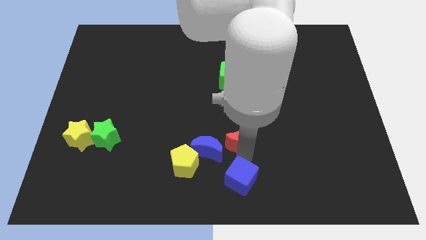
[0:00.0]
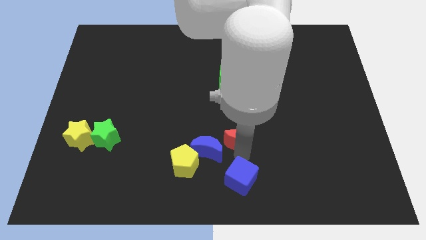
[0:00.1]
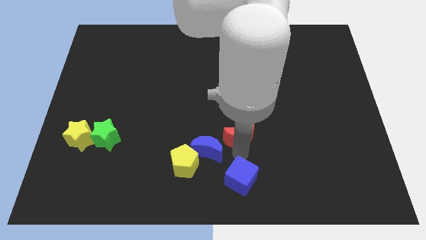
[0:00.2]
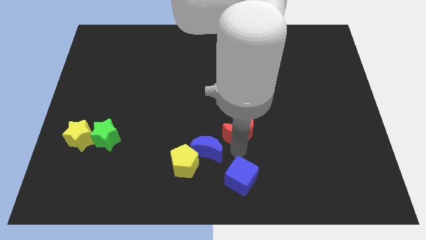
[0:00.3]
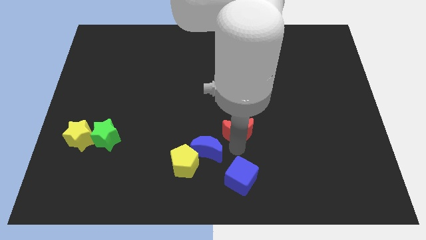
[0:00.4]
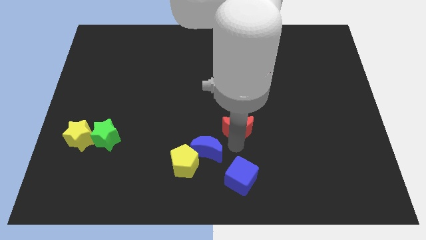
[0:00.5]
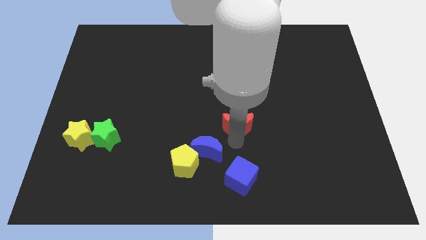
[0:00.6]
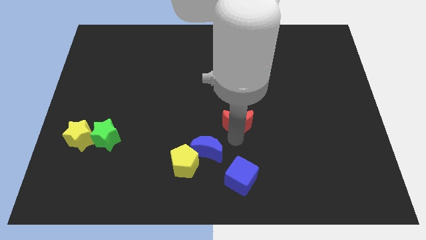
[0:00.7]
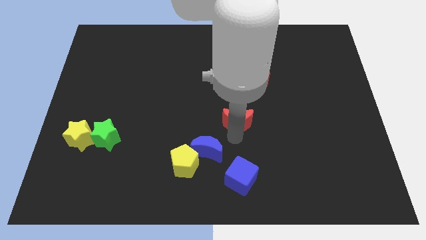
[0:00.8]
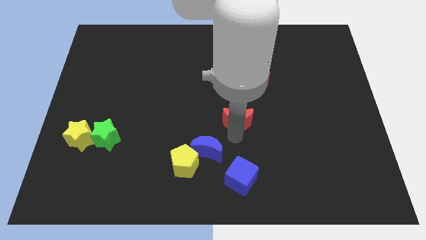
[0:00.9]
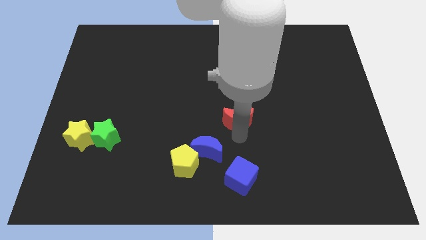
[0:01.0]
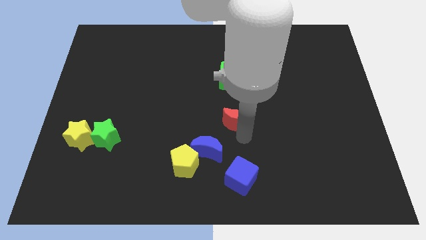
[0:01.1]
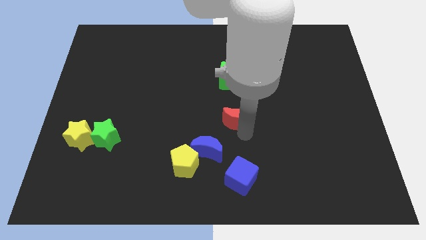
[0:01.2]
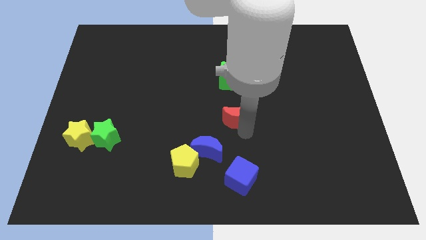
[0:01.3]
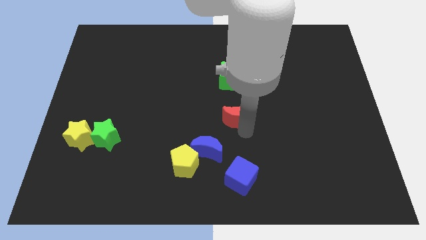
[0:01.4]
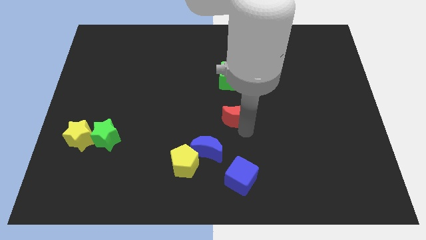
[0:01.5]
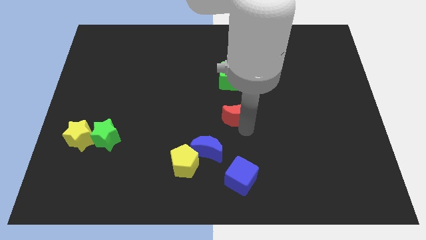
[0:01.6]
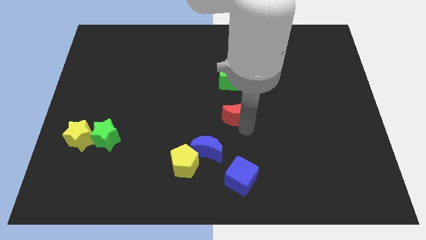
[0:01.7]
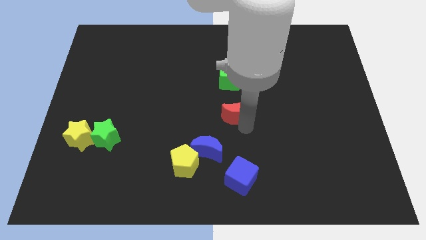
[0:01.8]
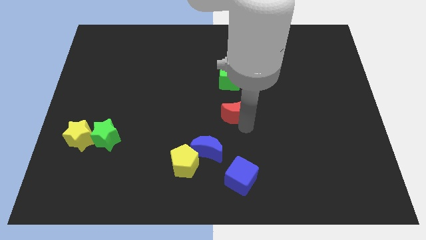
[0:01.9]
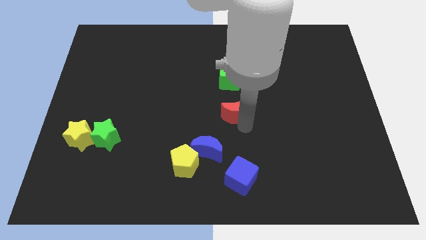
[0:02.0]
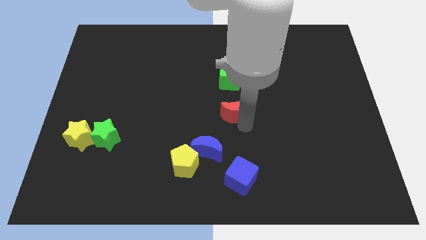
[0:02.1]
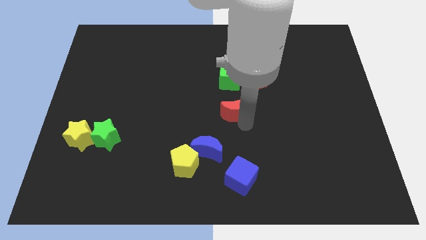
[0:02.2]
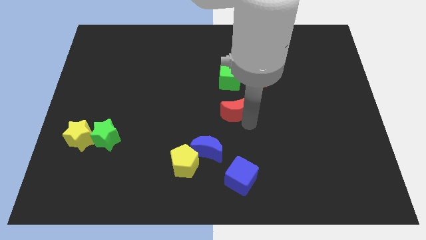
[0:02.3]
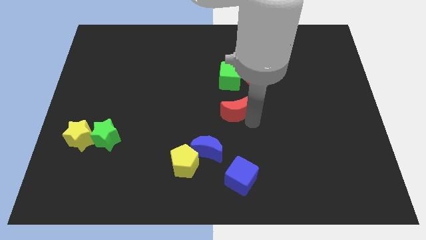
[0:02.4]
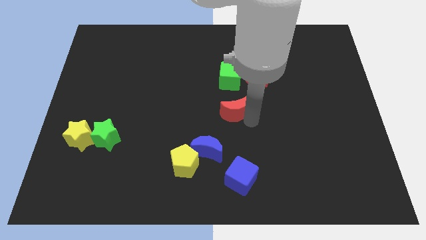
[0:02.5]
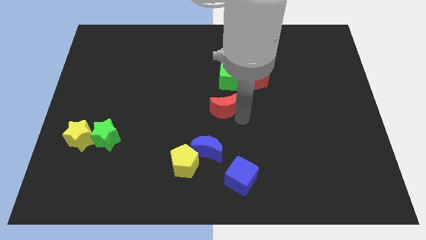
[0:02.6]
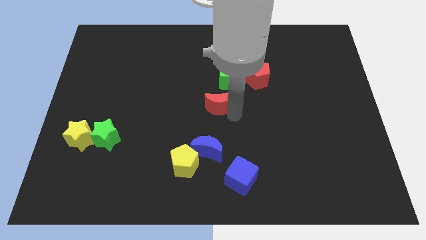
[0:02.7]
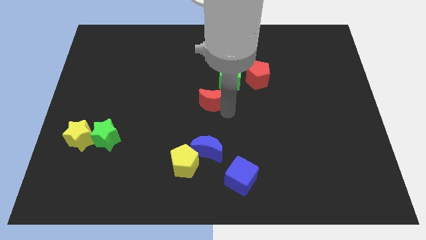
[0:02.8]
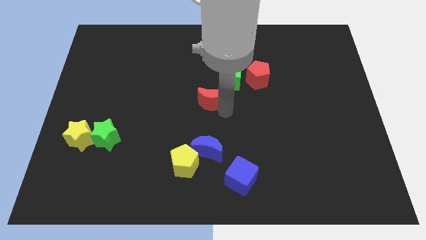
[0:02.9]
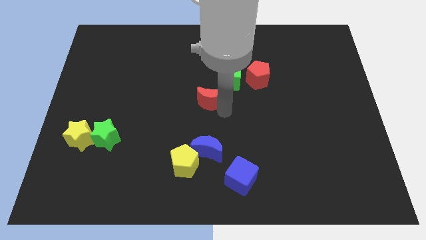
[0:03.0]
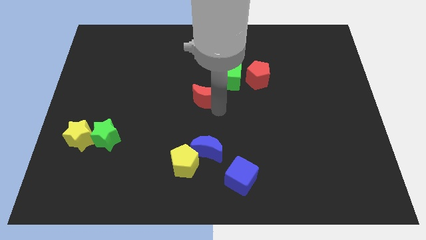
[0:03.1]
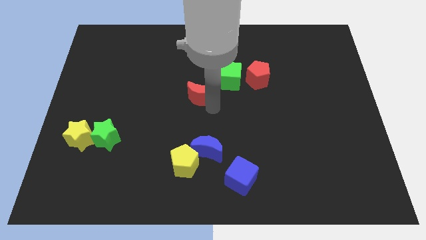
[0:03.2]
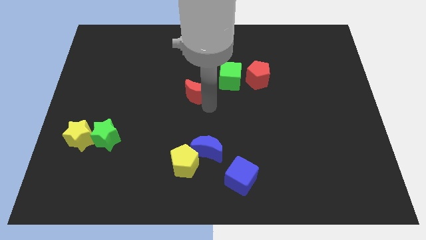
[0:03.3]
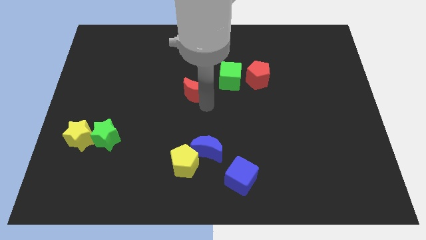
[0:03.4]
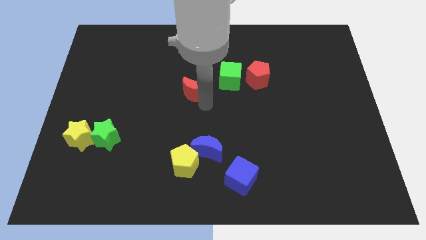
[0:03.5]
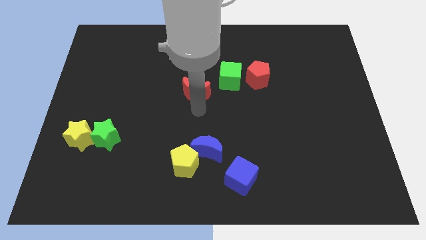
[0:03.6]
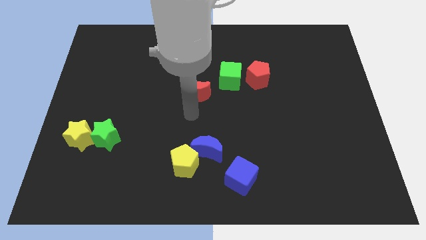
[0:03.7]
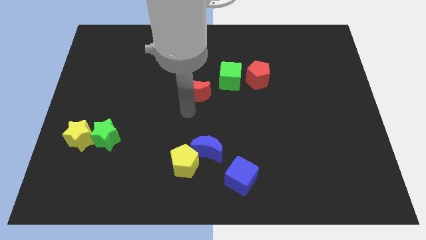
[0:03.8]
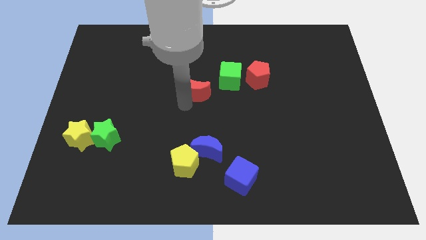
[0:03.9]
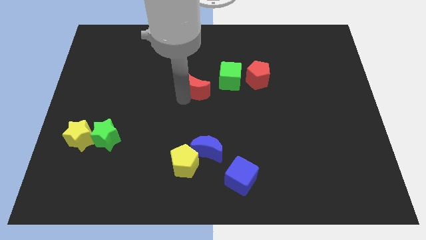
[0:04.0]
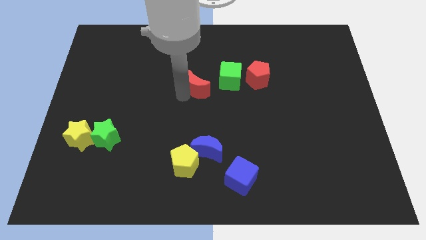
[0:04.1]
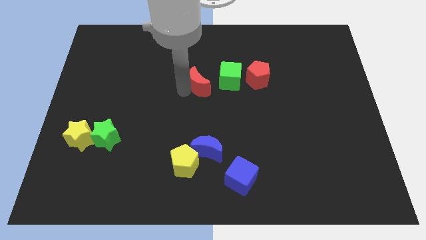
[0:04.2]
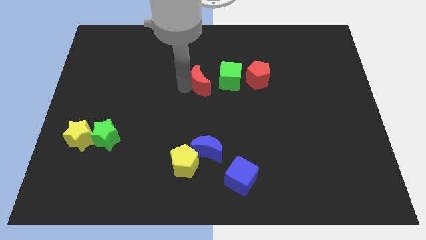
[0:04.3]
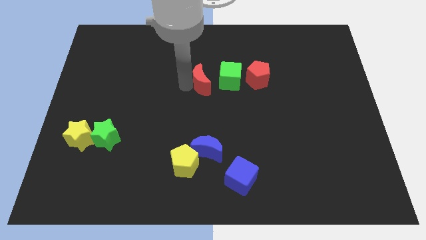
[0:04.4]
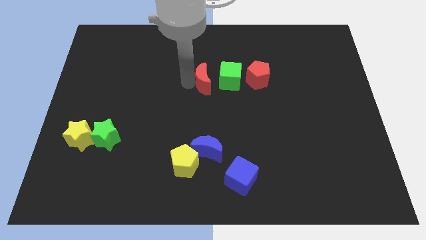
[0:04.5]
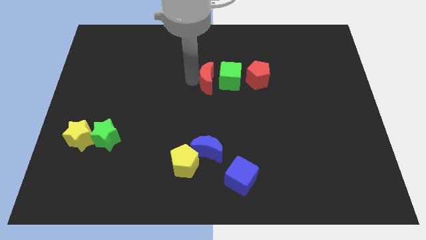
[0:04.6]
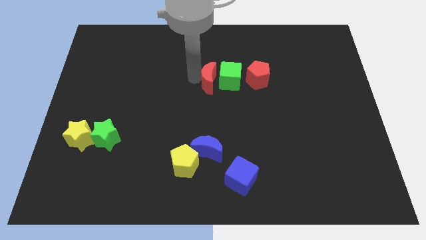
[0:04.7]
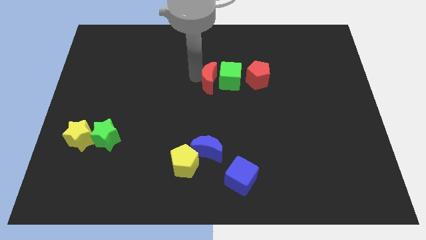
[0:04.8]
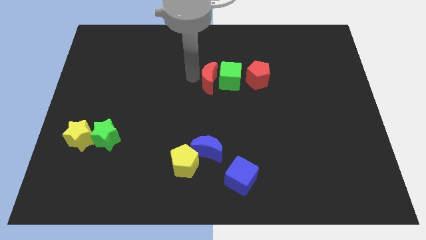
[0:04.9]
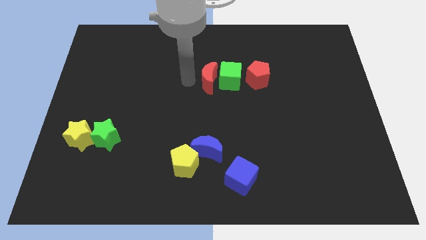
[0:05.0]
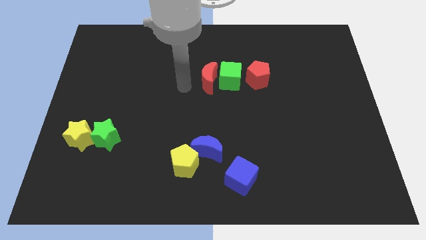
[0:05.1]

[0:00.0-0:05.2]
place the red moon left to the green cube

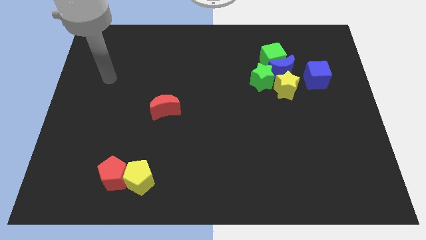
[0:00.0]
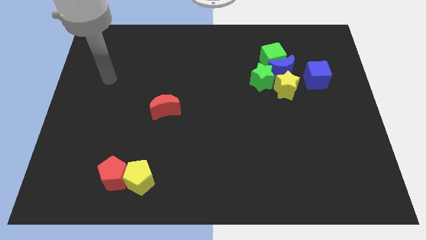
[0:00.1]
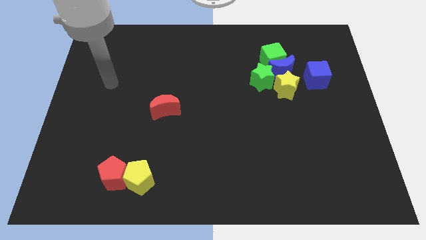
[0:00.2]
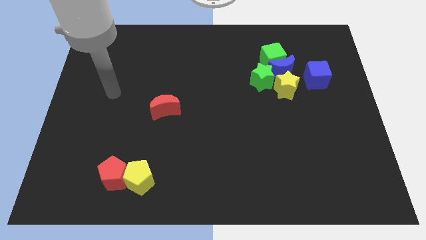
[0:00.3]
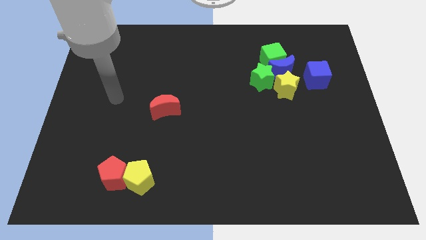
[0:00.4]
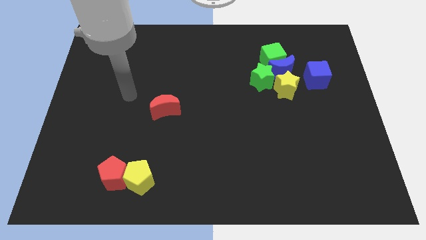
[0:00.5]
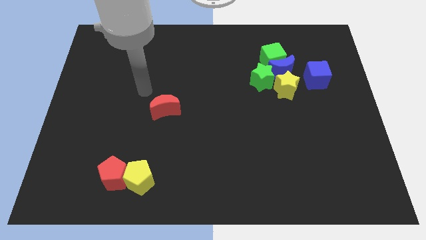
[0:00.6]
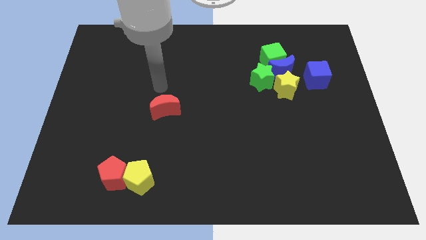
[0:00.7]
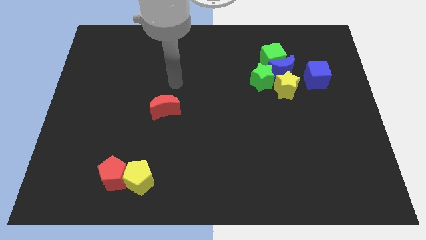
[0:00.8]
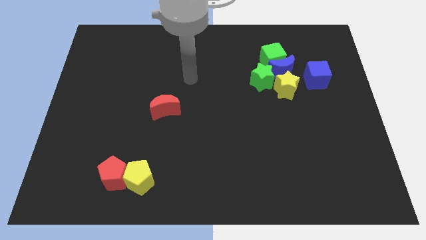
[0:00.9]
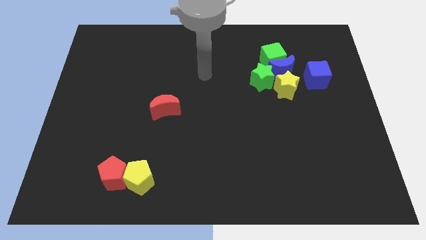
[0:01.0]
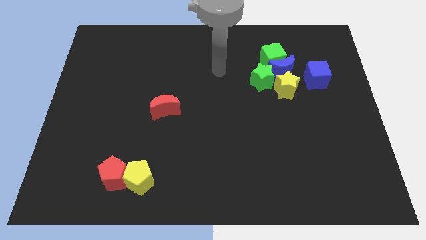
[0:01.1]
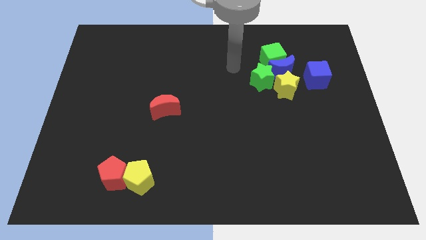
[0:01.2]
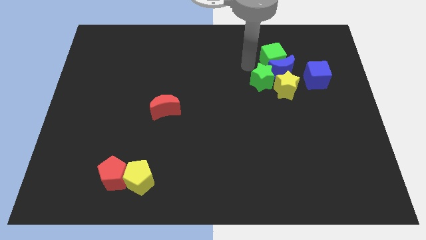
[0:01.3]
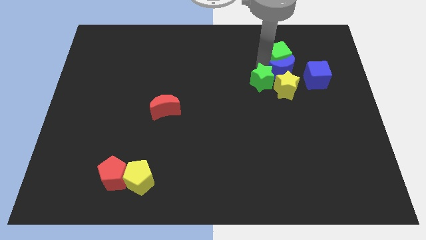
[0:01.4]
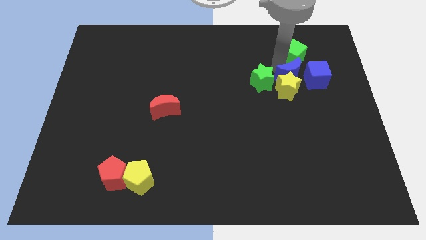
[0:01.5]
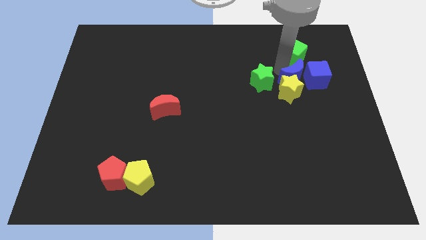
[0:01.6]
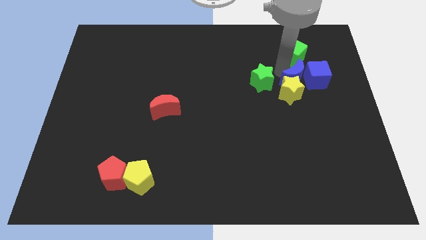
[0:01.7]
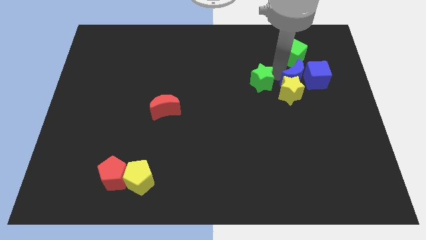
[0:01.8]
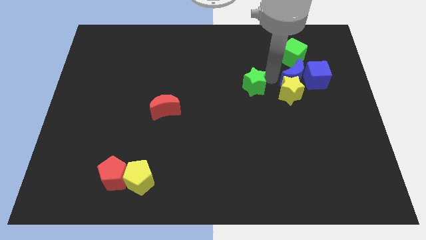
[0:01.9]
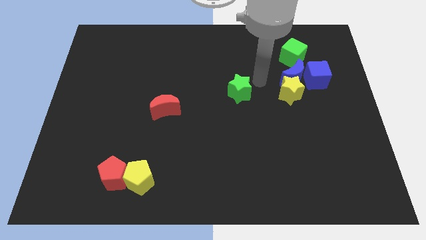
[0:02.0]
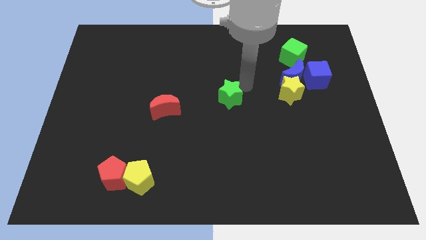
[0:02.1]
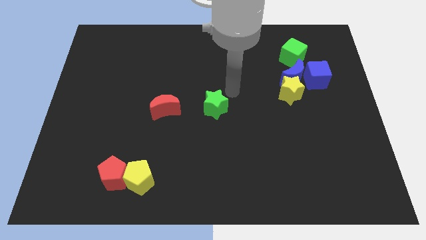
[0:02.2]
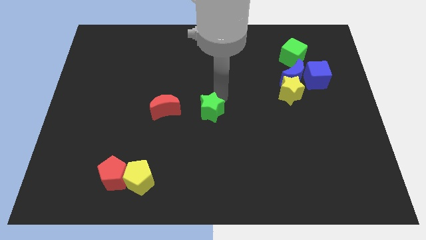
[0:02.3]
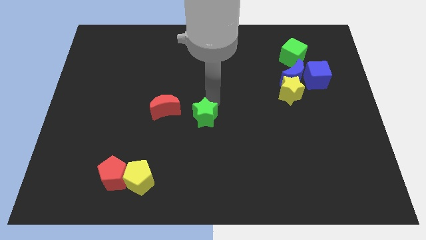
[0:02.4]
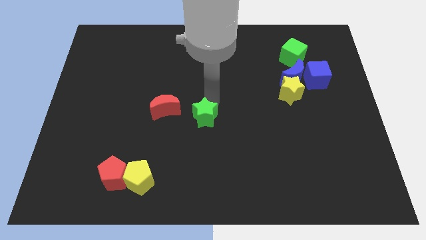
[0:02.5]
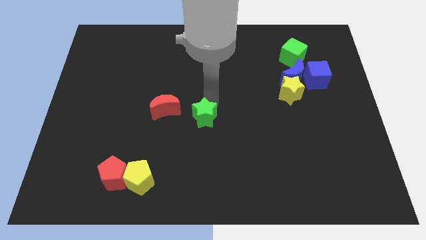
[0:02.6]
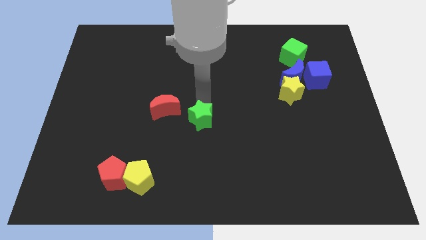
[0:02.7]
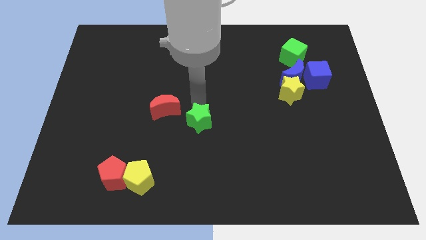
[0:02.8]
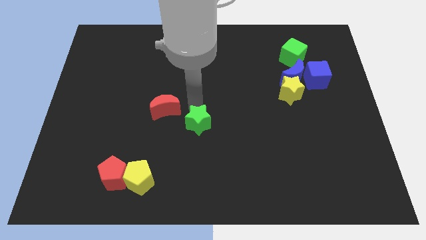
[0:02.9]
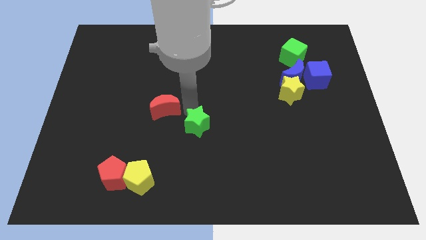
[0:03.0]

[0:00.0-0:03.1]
separate the green star from the blue crescent

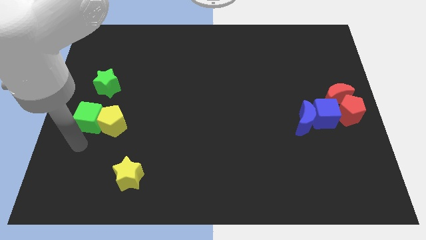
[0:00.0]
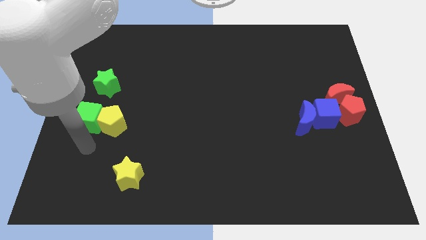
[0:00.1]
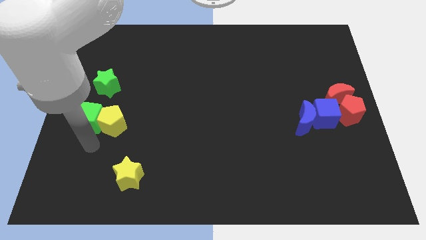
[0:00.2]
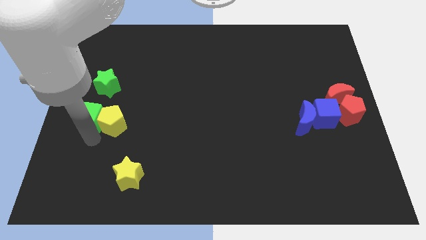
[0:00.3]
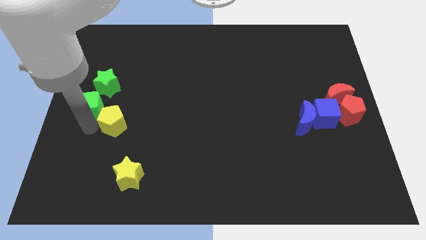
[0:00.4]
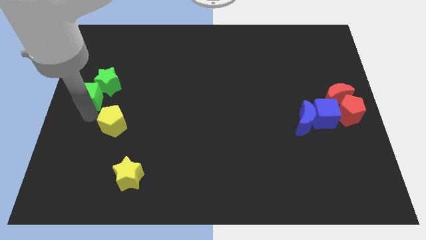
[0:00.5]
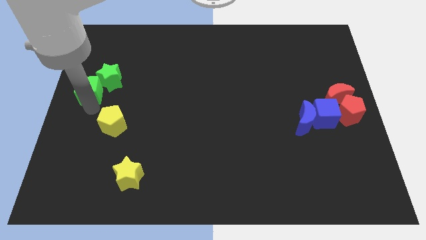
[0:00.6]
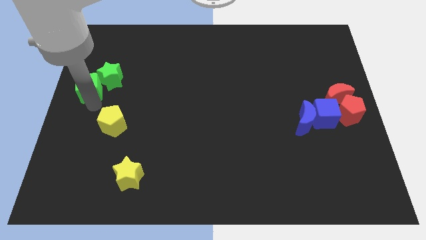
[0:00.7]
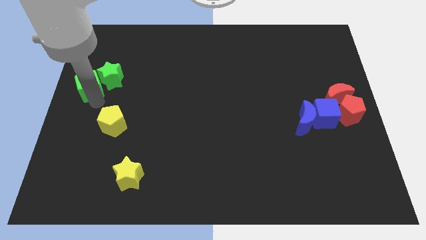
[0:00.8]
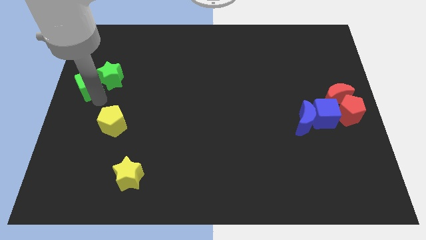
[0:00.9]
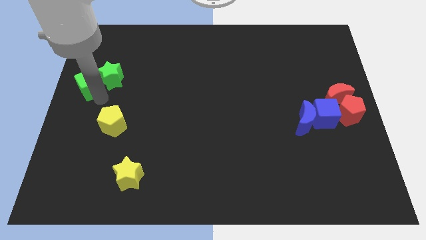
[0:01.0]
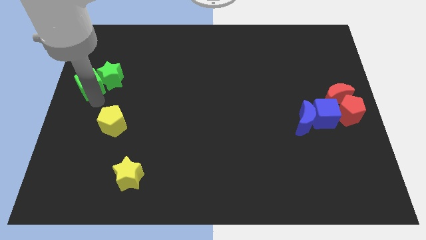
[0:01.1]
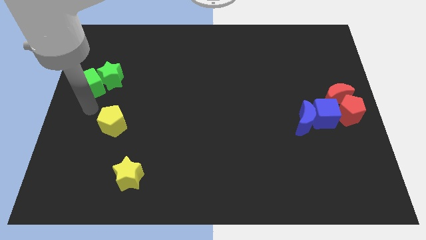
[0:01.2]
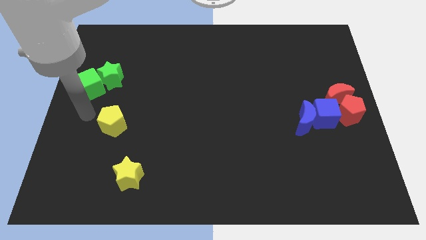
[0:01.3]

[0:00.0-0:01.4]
push the green cube to the left of the green star
